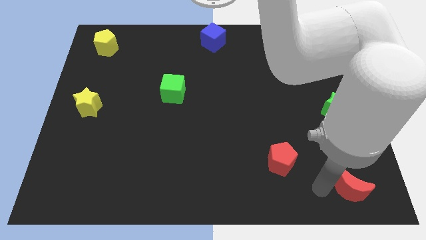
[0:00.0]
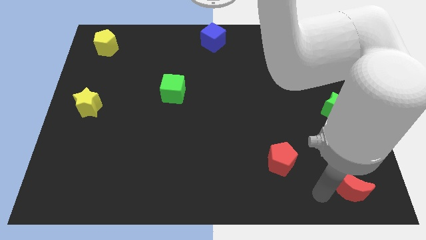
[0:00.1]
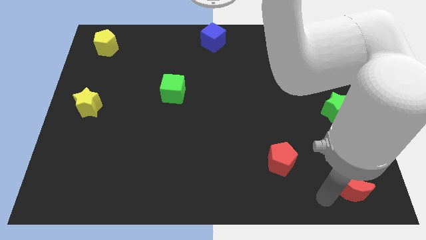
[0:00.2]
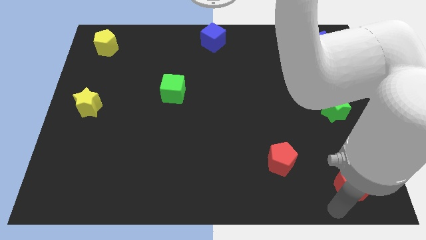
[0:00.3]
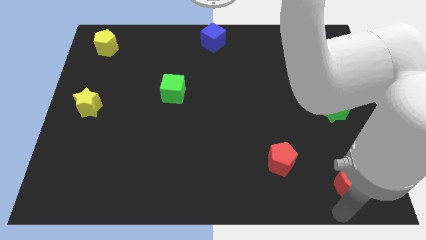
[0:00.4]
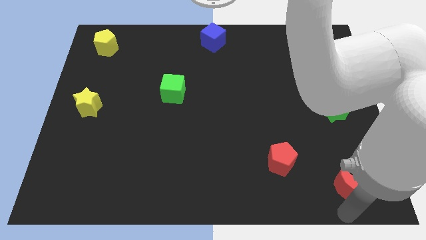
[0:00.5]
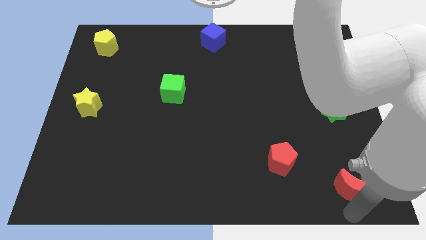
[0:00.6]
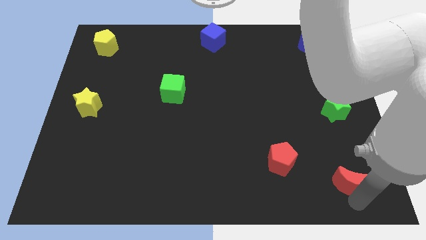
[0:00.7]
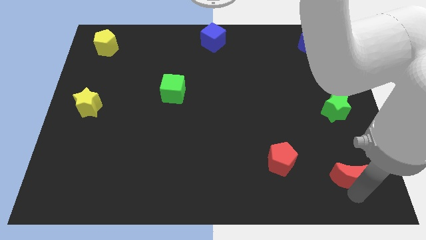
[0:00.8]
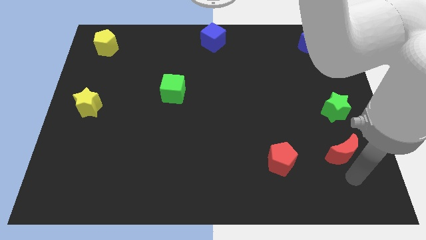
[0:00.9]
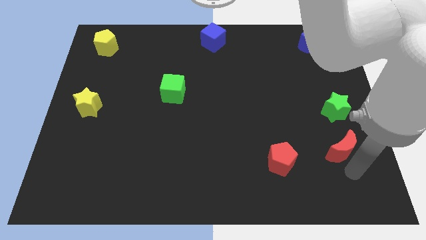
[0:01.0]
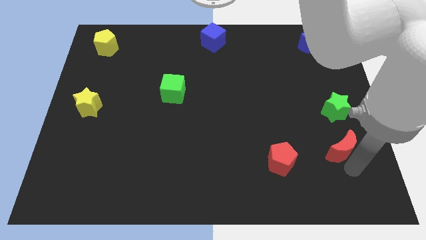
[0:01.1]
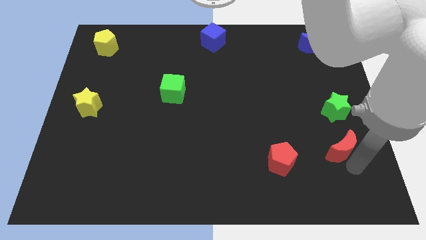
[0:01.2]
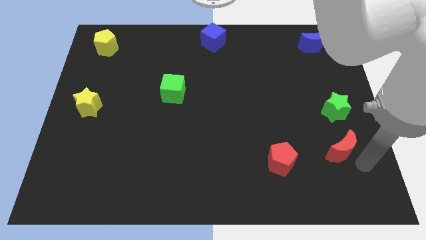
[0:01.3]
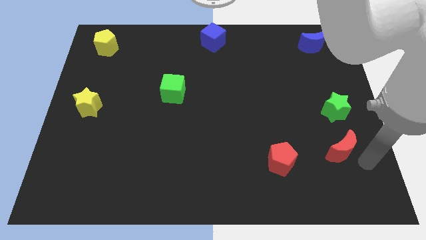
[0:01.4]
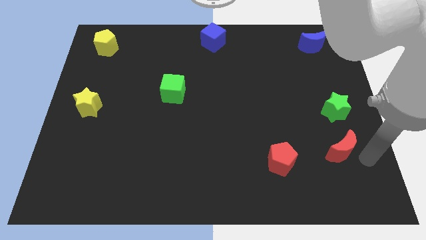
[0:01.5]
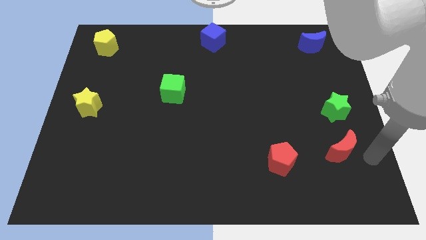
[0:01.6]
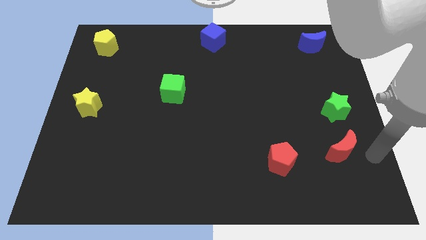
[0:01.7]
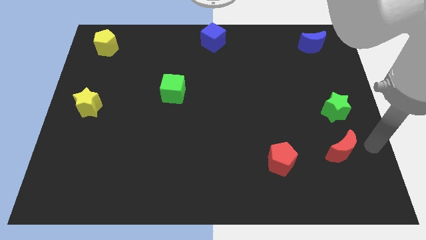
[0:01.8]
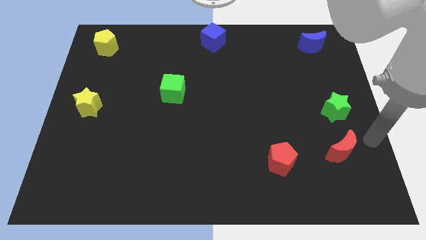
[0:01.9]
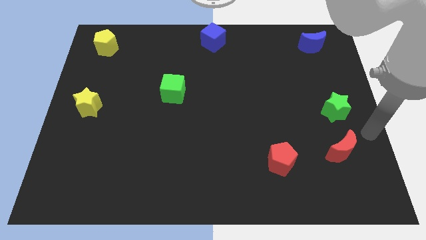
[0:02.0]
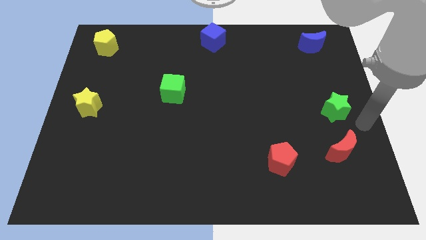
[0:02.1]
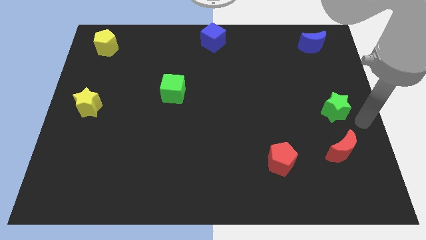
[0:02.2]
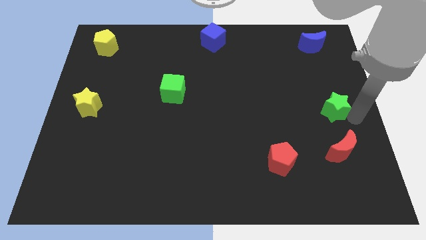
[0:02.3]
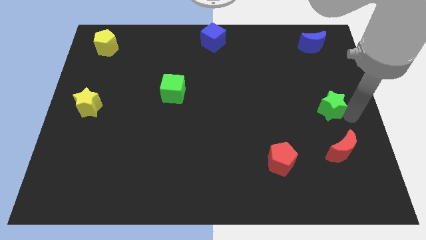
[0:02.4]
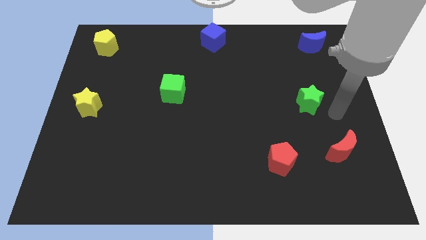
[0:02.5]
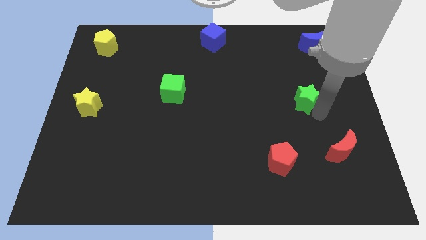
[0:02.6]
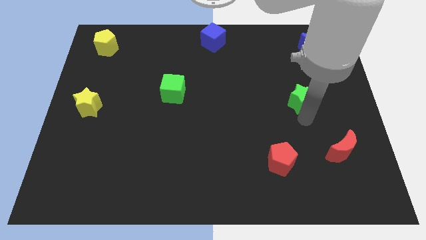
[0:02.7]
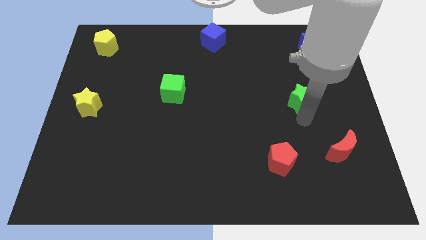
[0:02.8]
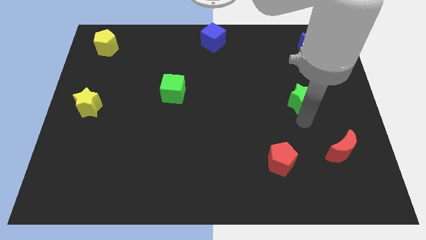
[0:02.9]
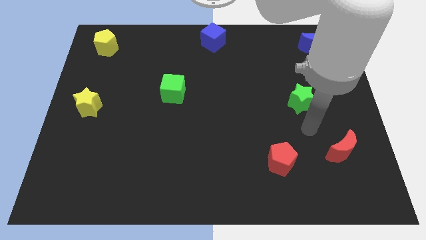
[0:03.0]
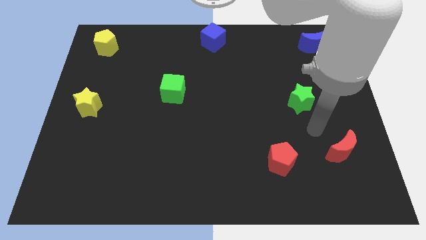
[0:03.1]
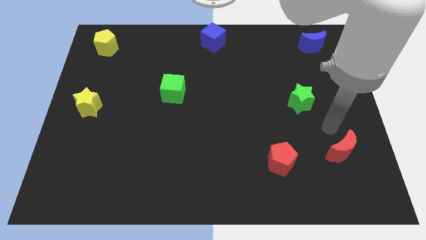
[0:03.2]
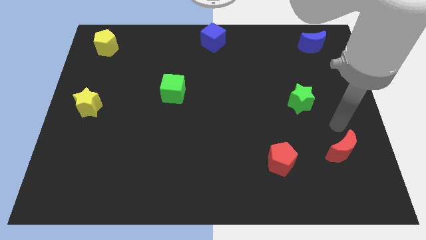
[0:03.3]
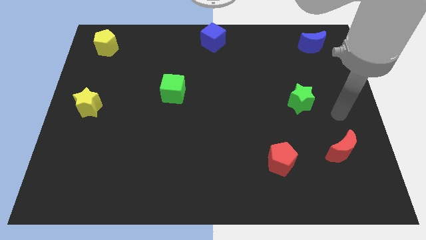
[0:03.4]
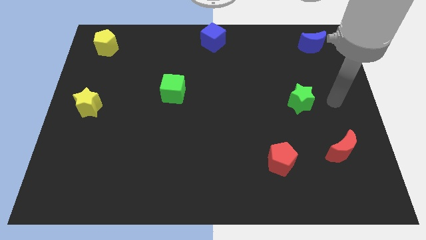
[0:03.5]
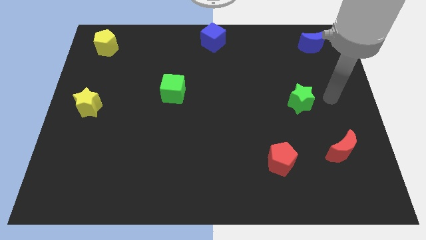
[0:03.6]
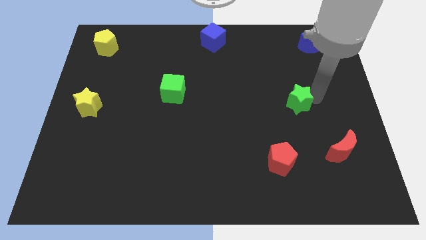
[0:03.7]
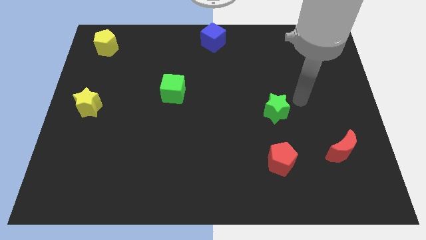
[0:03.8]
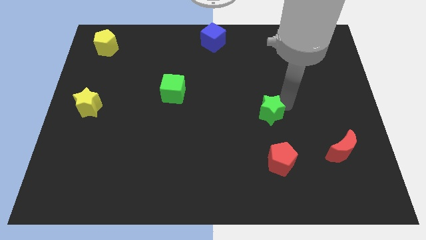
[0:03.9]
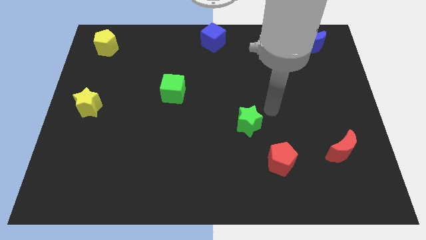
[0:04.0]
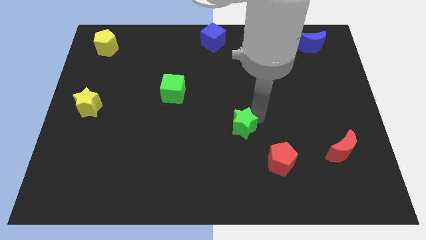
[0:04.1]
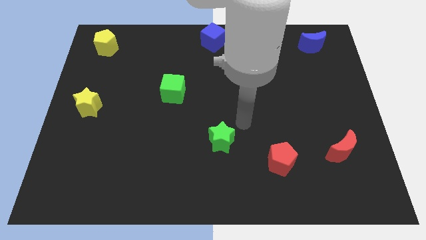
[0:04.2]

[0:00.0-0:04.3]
move the green star towards the center of the board

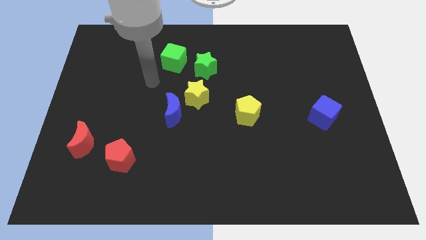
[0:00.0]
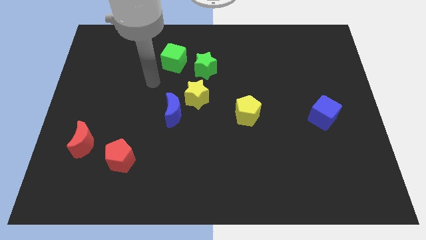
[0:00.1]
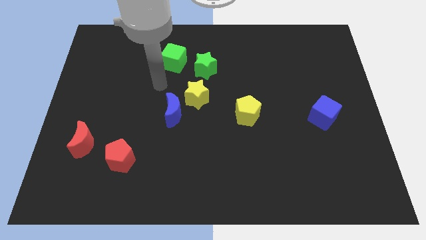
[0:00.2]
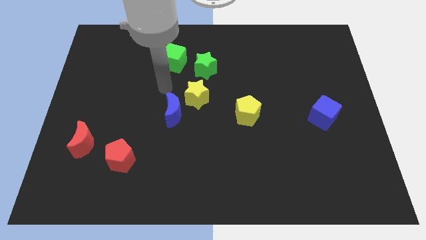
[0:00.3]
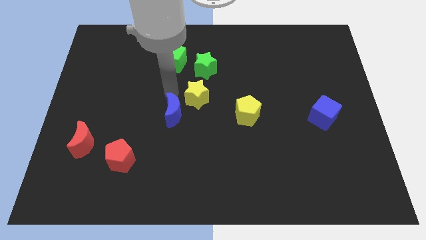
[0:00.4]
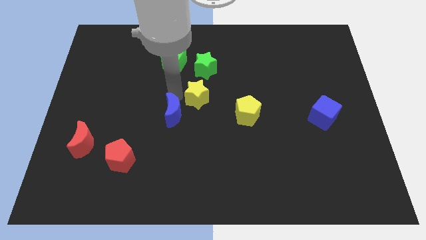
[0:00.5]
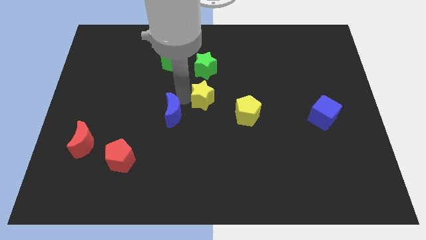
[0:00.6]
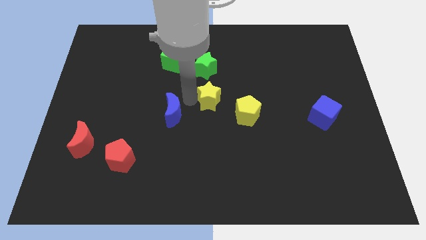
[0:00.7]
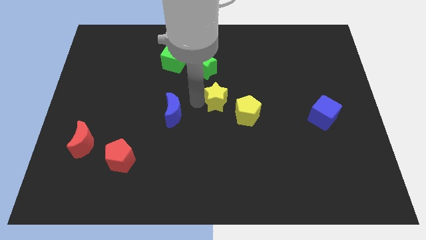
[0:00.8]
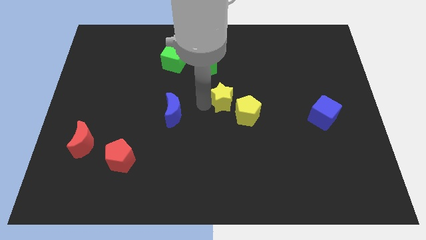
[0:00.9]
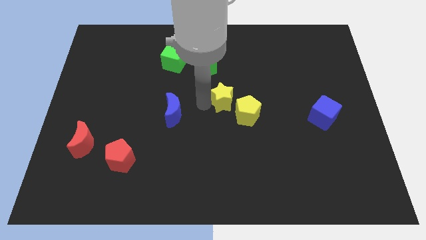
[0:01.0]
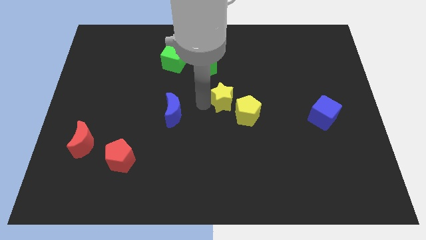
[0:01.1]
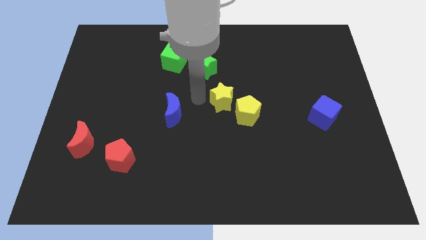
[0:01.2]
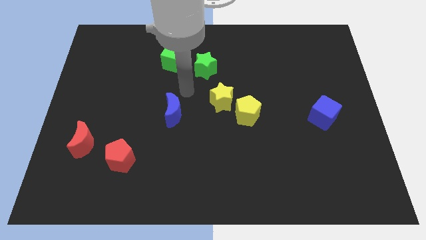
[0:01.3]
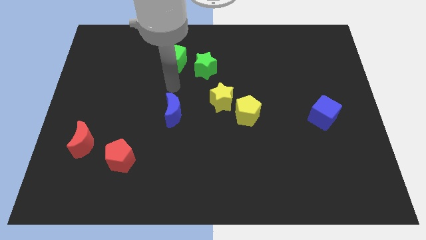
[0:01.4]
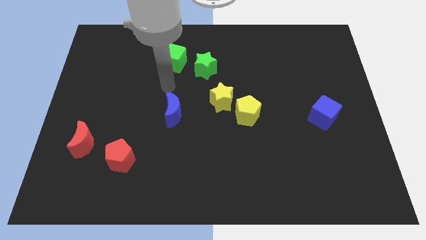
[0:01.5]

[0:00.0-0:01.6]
slightly move yellow star towards the yellow pentagon

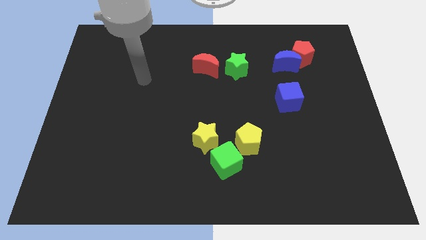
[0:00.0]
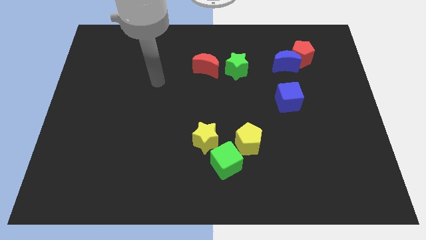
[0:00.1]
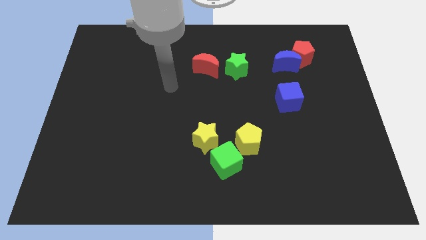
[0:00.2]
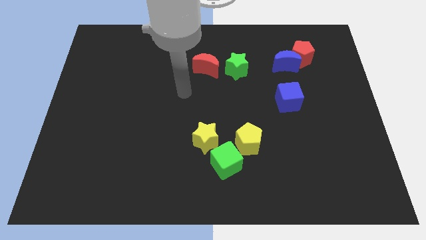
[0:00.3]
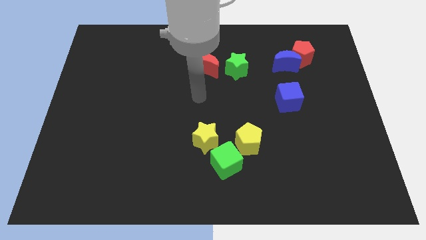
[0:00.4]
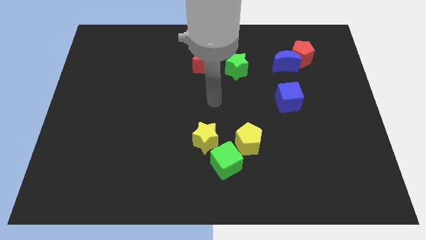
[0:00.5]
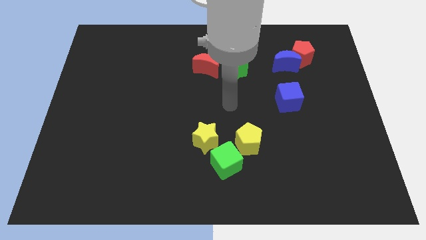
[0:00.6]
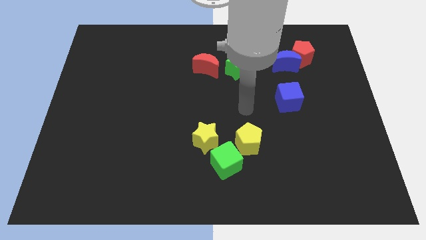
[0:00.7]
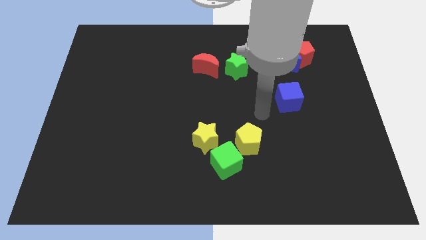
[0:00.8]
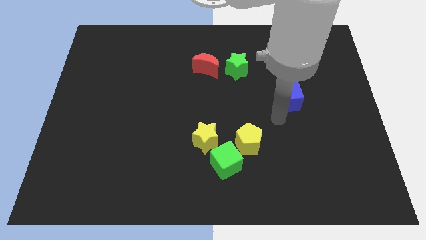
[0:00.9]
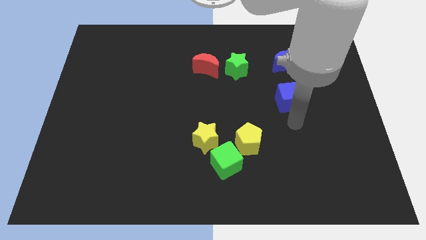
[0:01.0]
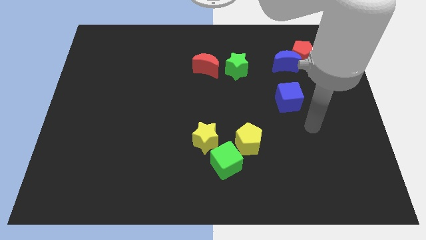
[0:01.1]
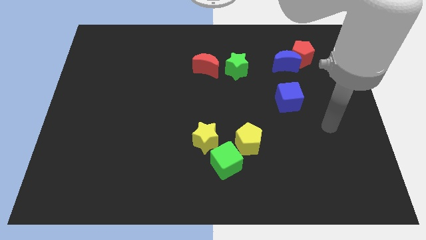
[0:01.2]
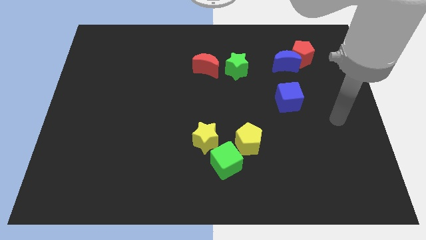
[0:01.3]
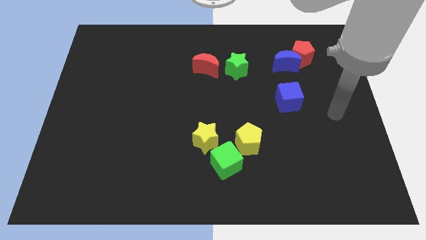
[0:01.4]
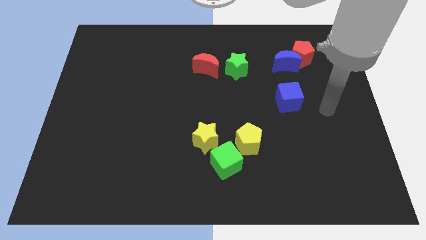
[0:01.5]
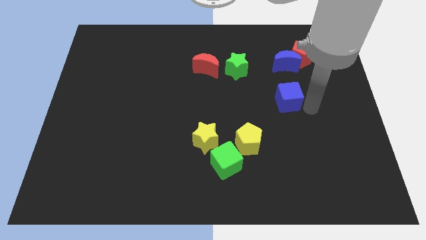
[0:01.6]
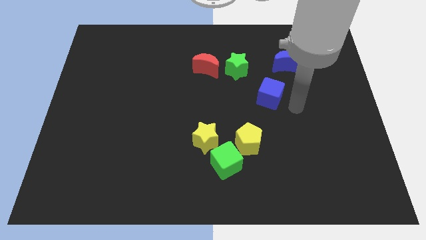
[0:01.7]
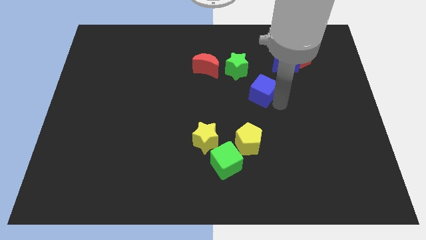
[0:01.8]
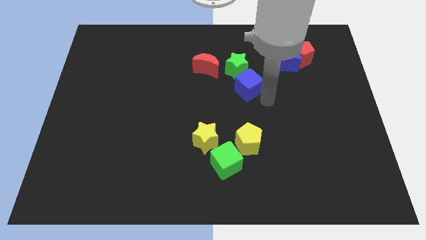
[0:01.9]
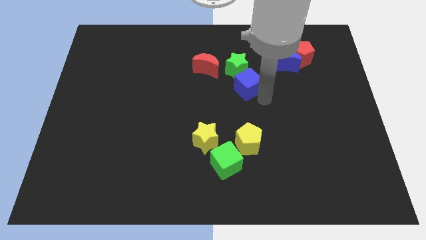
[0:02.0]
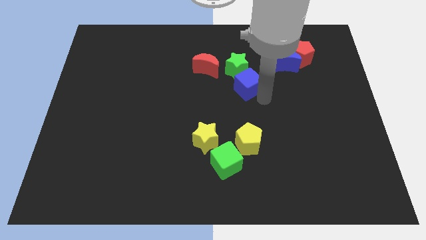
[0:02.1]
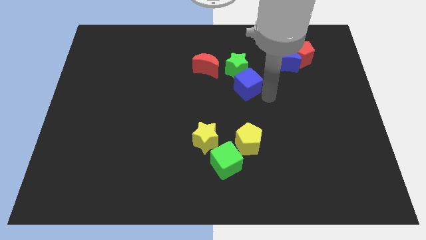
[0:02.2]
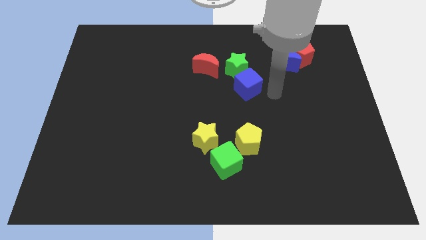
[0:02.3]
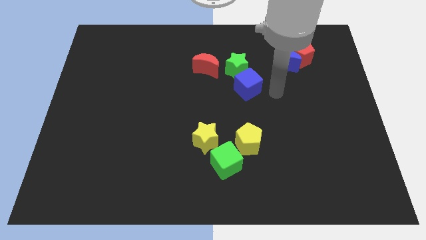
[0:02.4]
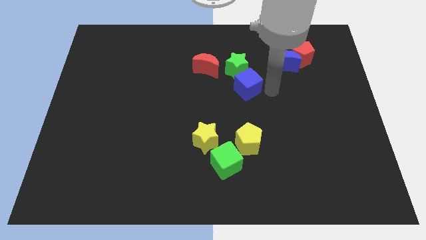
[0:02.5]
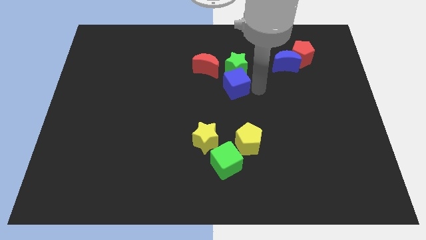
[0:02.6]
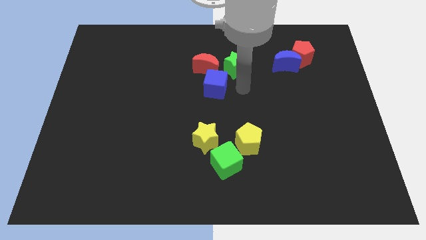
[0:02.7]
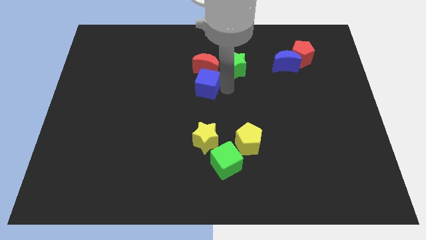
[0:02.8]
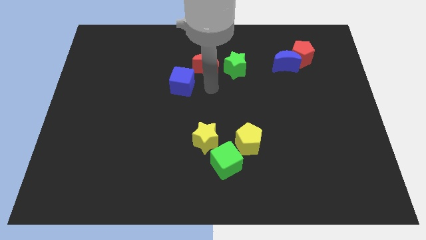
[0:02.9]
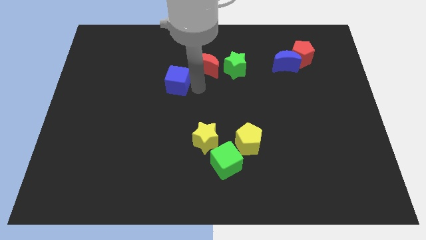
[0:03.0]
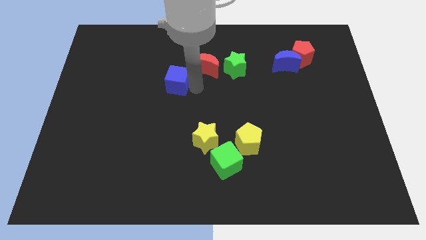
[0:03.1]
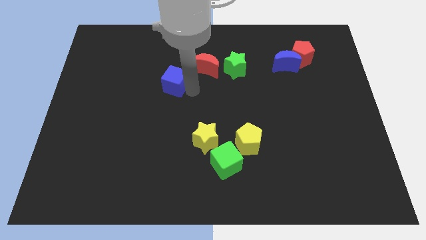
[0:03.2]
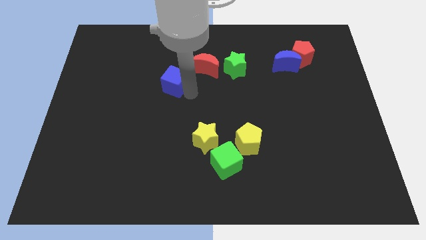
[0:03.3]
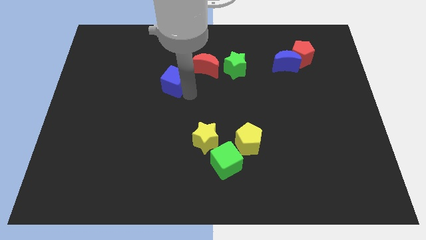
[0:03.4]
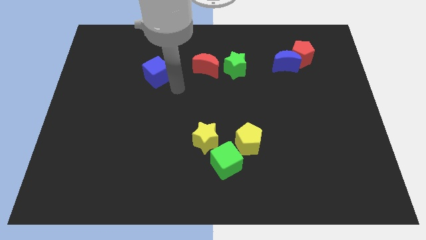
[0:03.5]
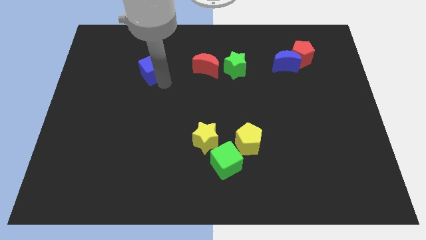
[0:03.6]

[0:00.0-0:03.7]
move the blue cube to the left of the red moon
